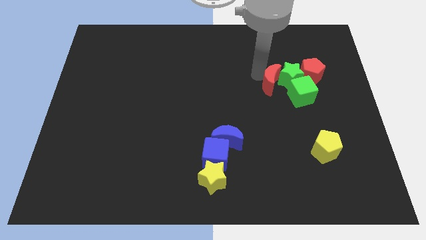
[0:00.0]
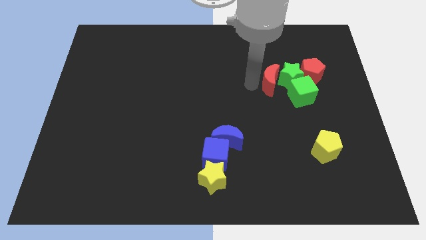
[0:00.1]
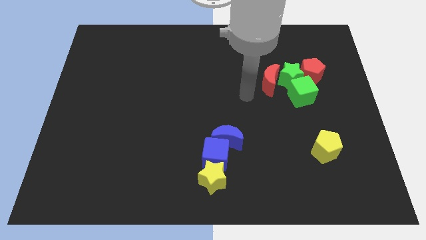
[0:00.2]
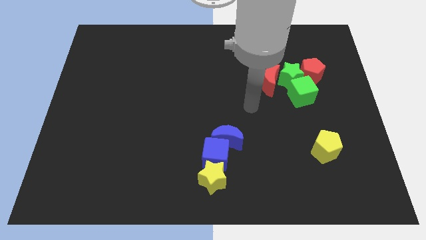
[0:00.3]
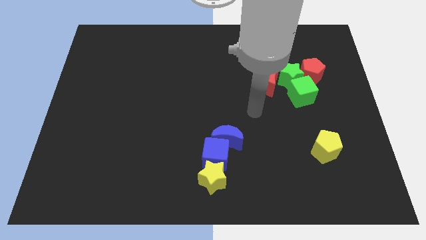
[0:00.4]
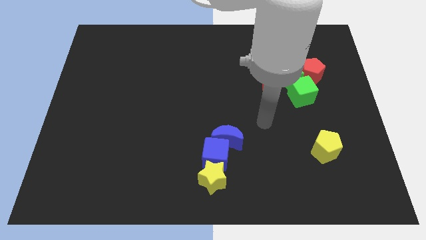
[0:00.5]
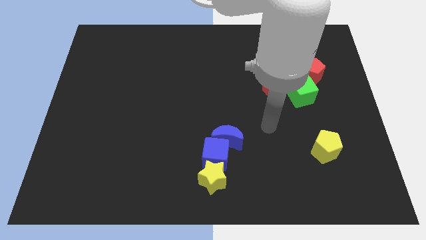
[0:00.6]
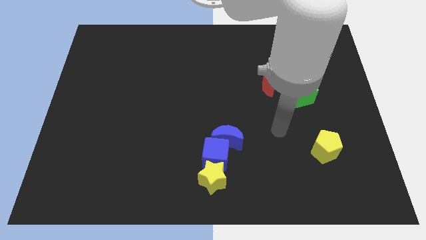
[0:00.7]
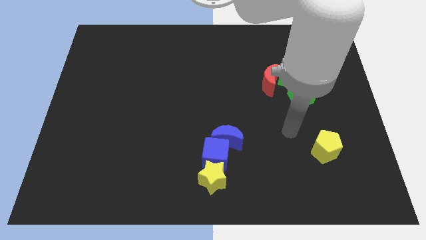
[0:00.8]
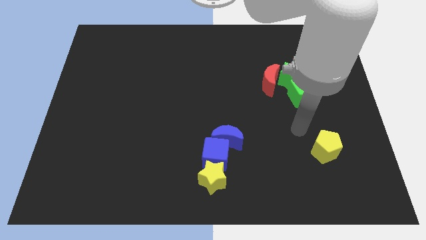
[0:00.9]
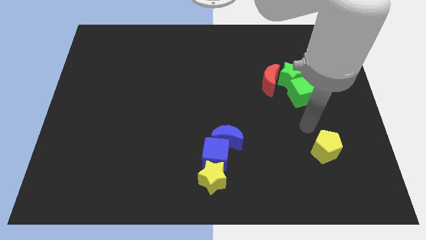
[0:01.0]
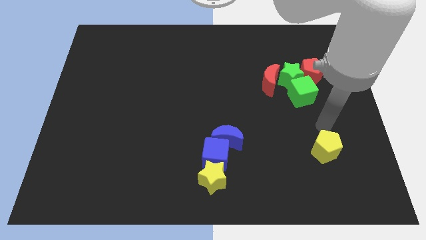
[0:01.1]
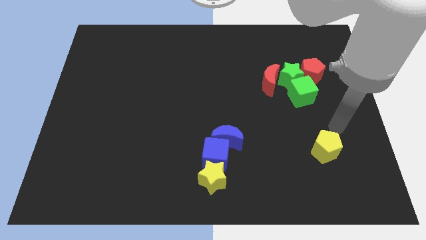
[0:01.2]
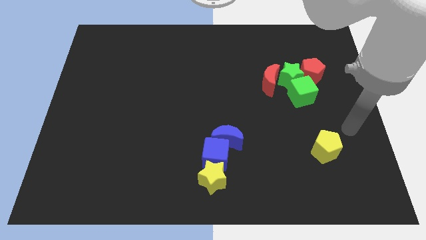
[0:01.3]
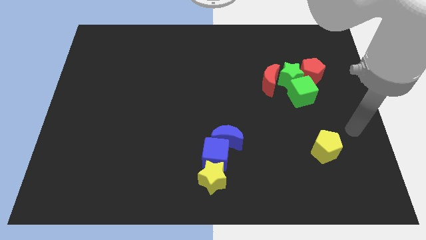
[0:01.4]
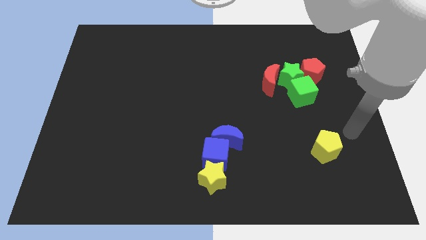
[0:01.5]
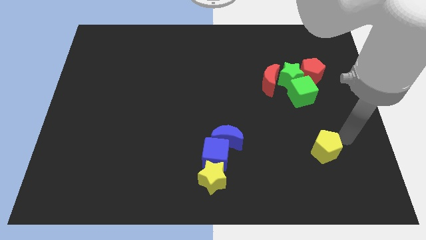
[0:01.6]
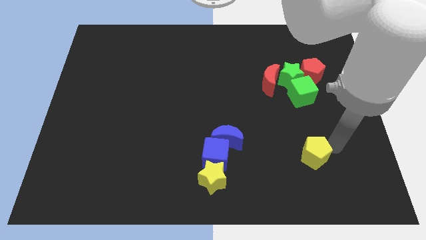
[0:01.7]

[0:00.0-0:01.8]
move your arm to the right side of the yellow pentagon

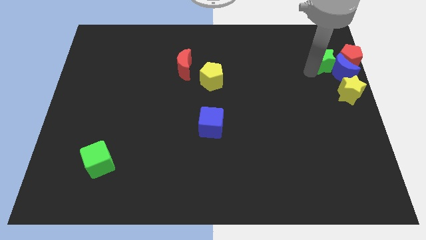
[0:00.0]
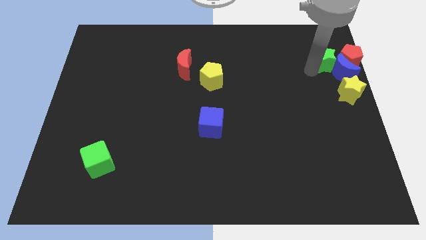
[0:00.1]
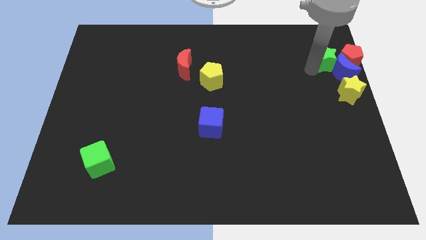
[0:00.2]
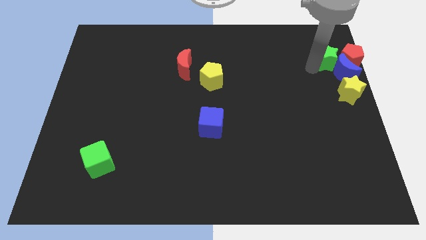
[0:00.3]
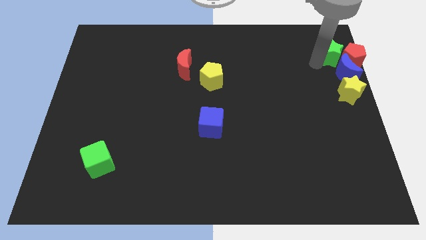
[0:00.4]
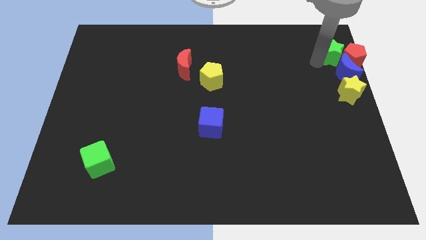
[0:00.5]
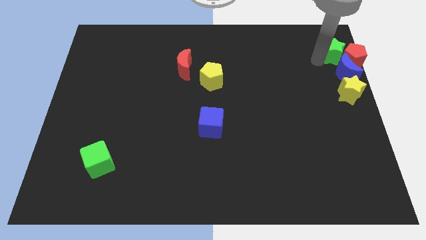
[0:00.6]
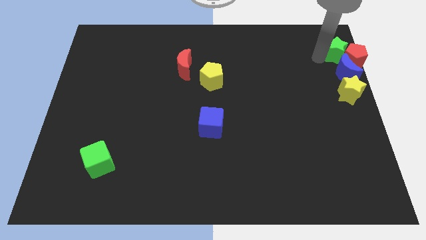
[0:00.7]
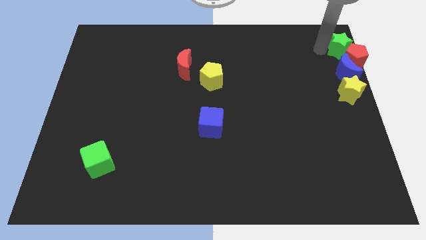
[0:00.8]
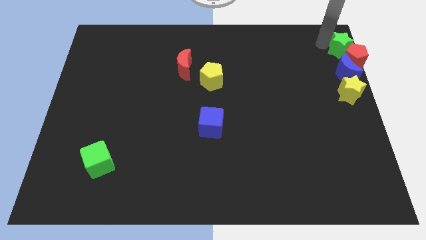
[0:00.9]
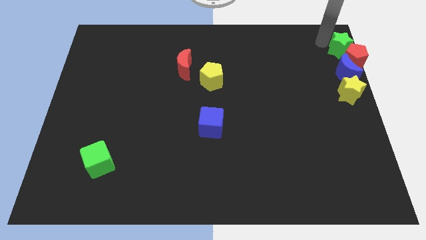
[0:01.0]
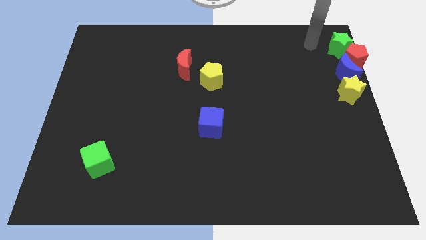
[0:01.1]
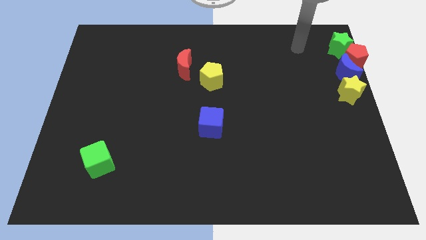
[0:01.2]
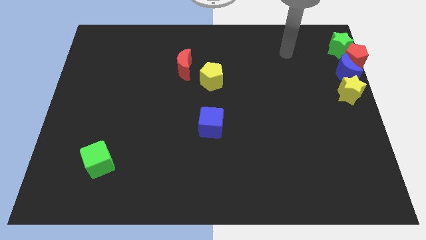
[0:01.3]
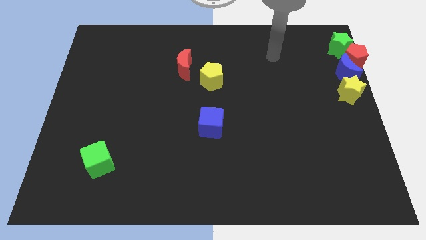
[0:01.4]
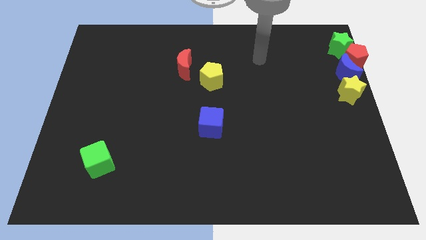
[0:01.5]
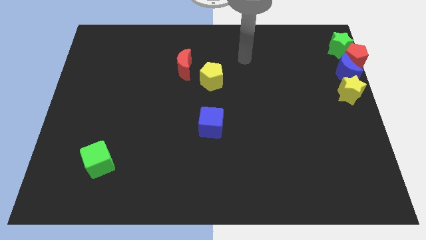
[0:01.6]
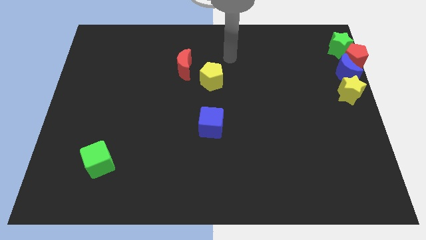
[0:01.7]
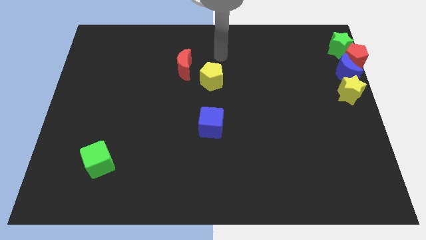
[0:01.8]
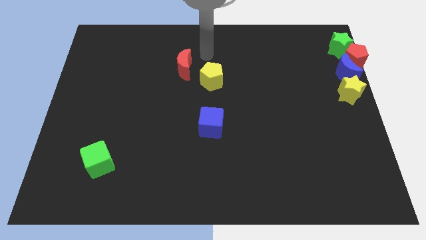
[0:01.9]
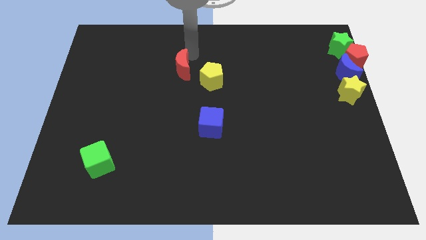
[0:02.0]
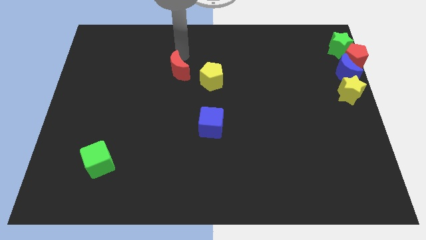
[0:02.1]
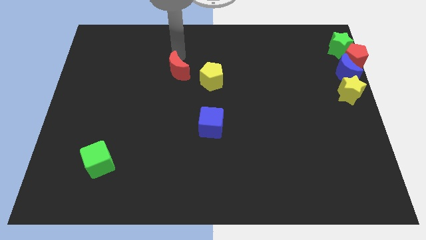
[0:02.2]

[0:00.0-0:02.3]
move the arm from the top right side towards the center side

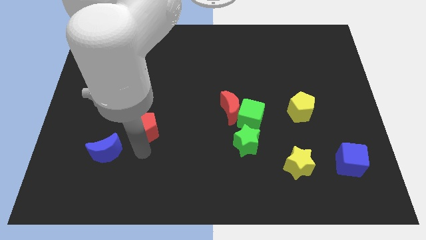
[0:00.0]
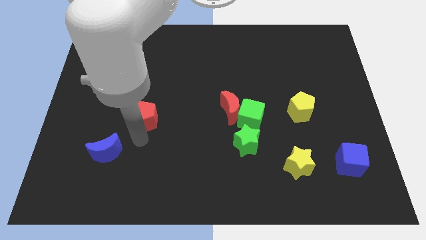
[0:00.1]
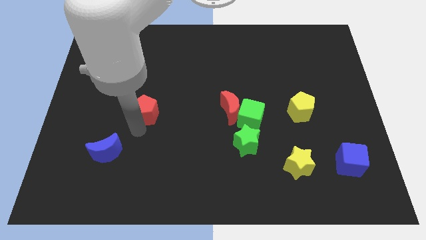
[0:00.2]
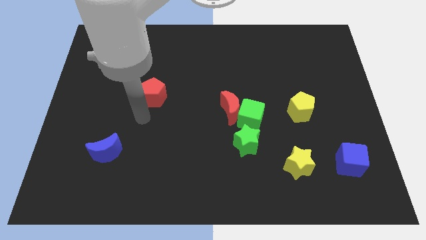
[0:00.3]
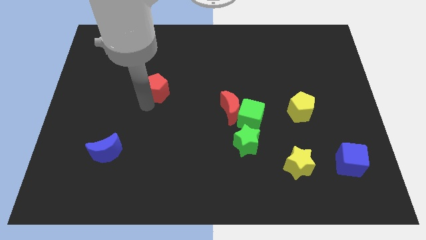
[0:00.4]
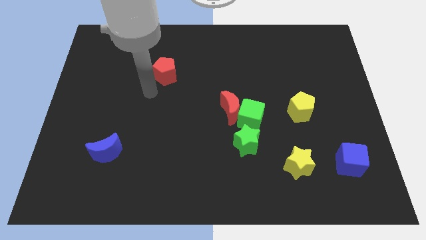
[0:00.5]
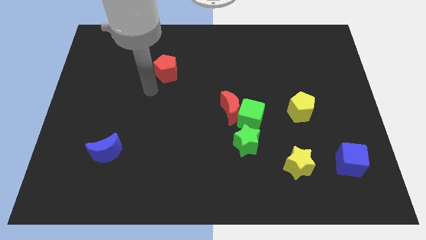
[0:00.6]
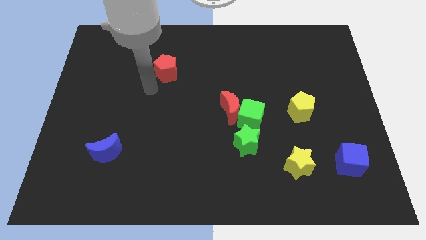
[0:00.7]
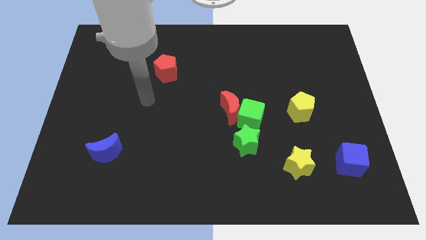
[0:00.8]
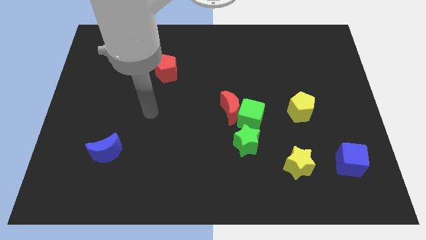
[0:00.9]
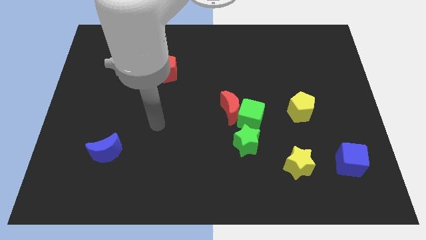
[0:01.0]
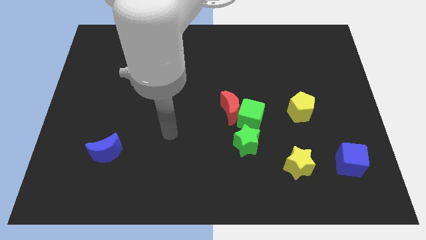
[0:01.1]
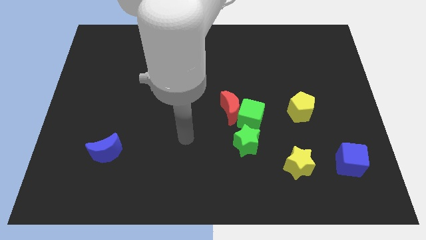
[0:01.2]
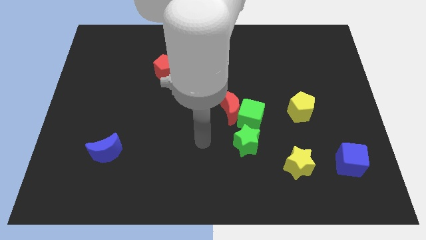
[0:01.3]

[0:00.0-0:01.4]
push the red pentagon diagonally to red crescent

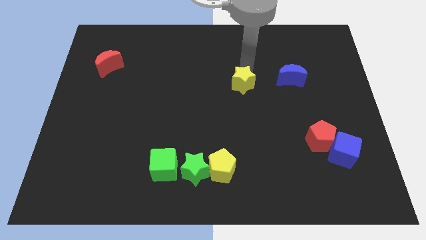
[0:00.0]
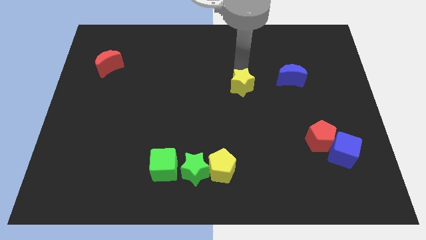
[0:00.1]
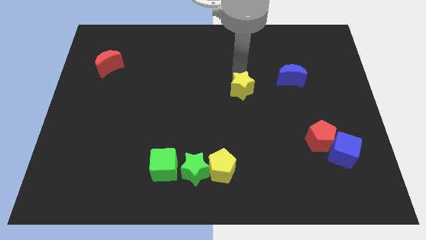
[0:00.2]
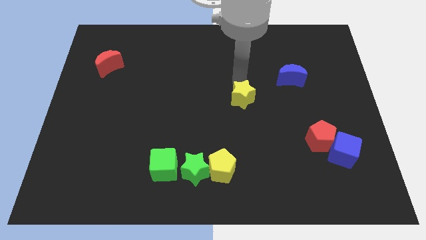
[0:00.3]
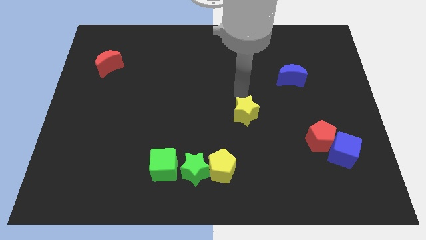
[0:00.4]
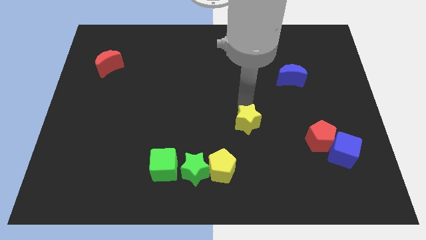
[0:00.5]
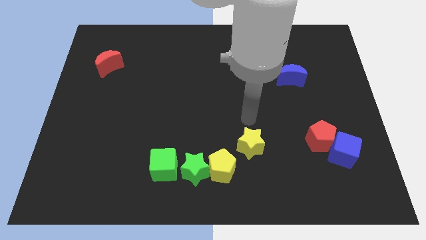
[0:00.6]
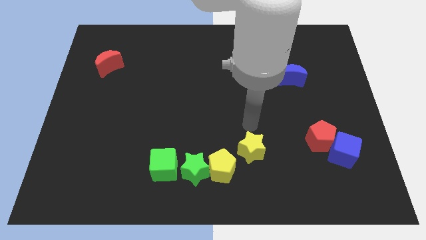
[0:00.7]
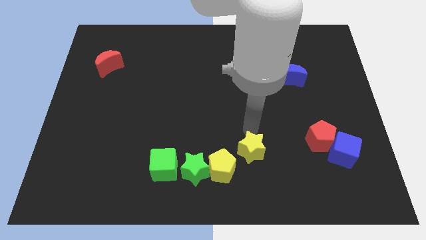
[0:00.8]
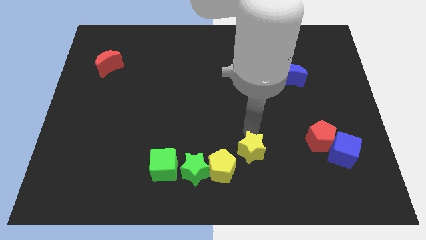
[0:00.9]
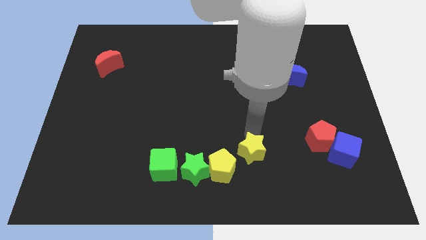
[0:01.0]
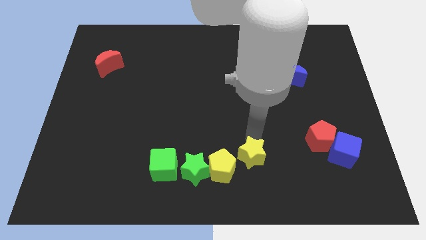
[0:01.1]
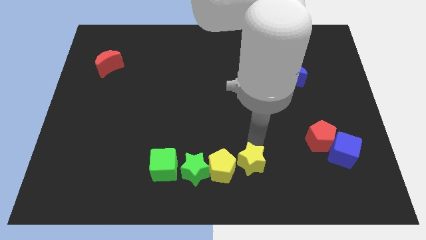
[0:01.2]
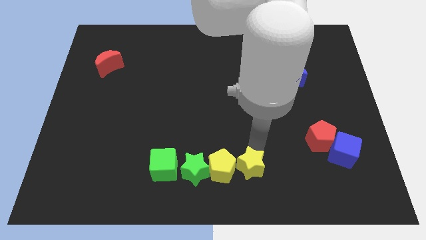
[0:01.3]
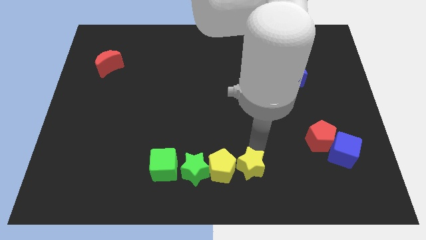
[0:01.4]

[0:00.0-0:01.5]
put the yellow star right to the yellow pentagon

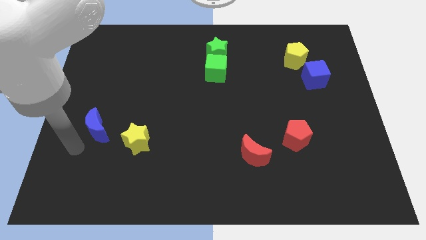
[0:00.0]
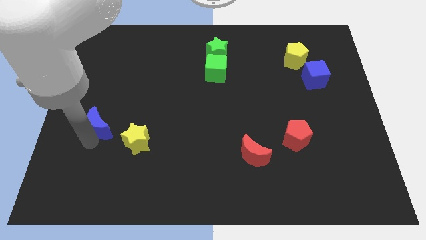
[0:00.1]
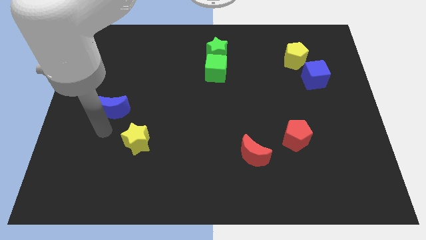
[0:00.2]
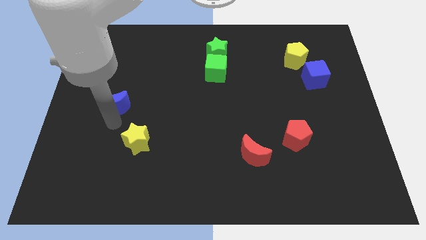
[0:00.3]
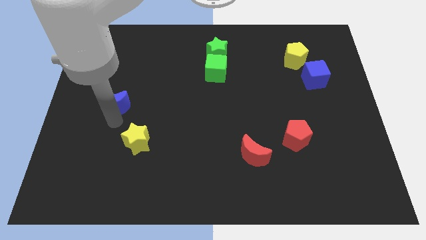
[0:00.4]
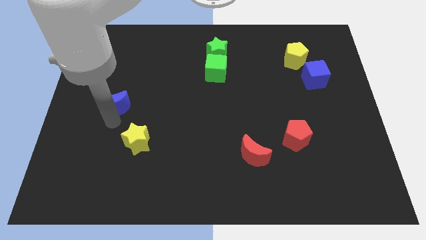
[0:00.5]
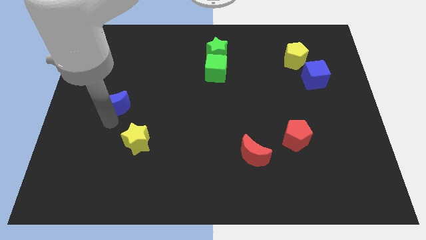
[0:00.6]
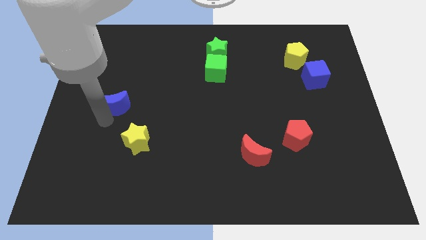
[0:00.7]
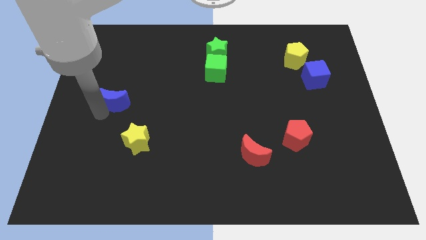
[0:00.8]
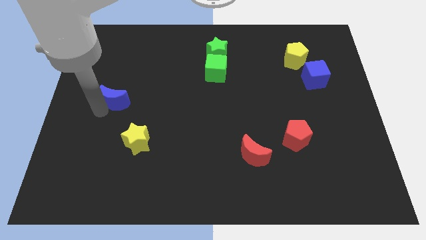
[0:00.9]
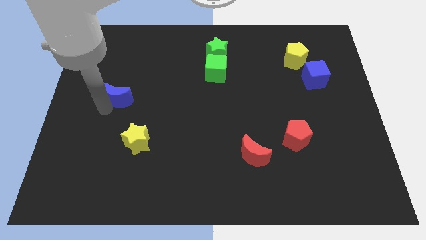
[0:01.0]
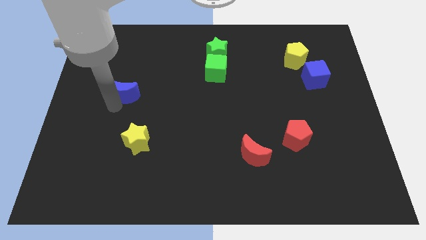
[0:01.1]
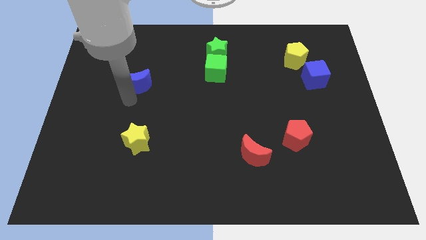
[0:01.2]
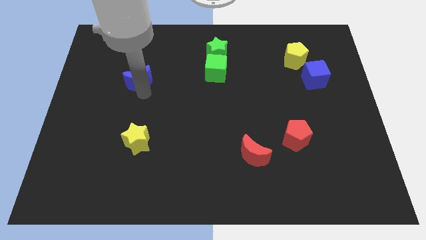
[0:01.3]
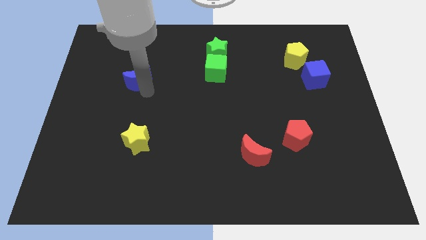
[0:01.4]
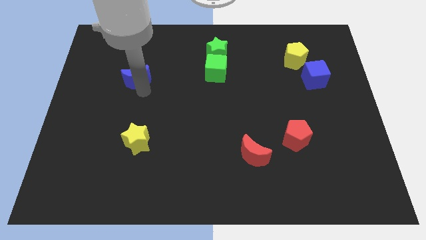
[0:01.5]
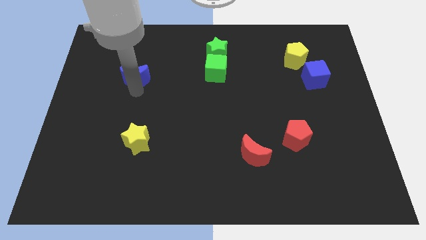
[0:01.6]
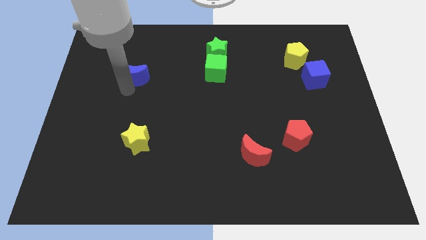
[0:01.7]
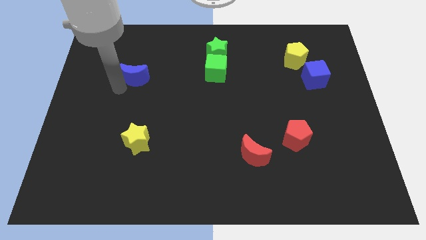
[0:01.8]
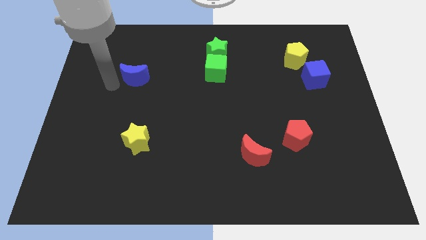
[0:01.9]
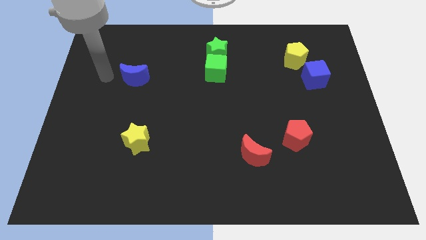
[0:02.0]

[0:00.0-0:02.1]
place the blue crescent horizontal to green cube
